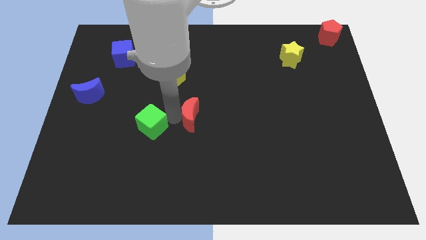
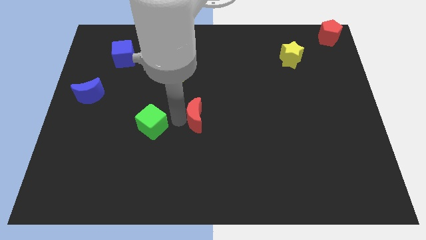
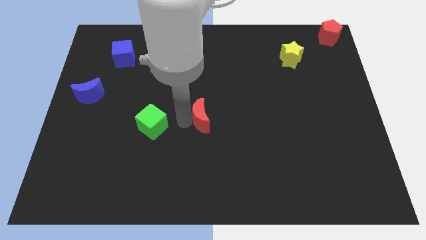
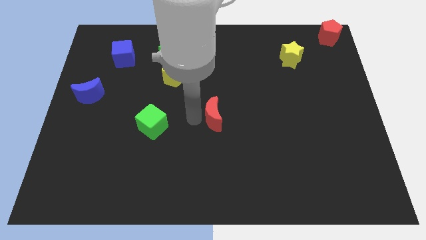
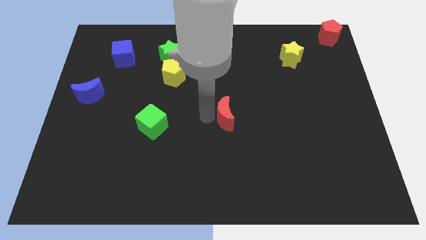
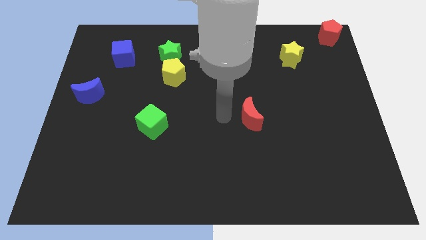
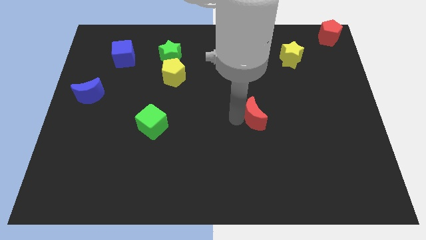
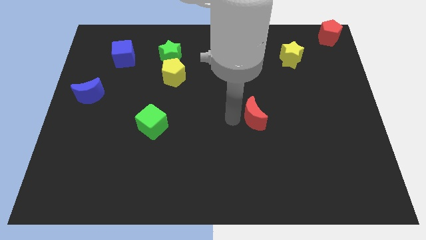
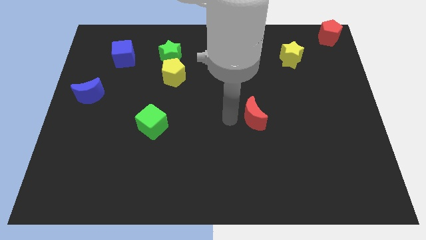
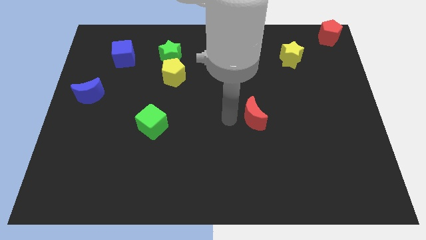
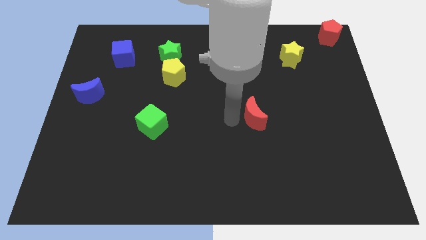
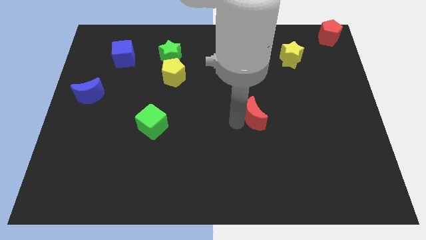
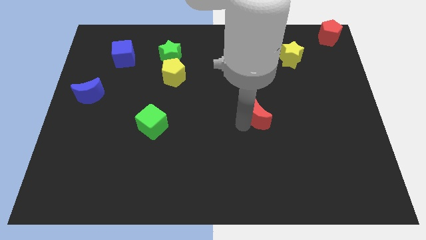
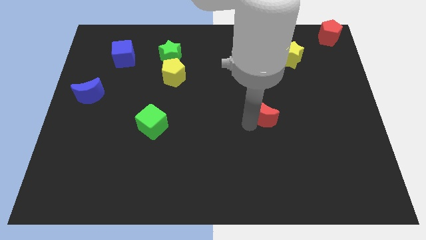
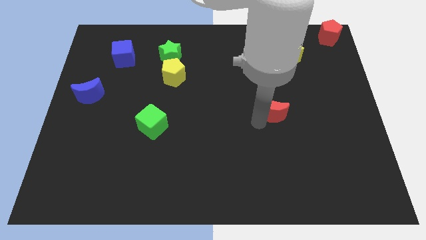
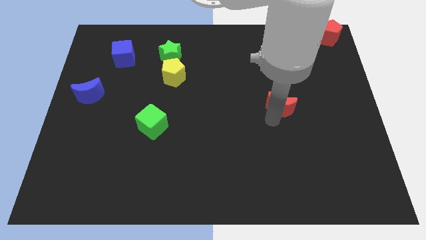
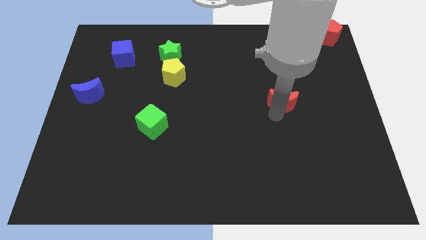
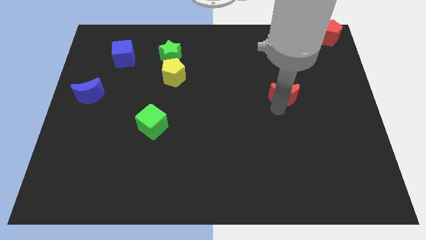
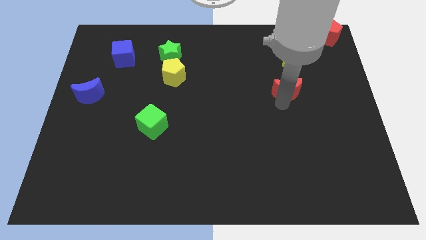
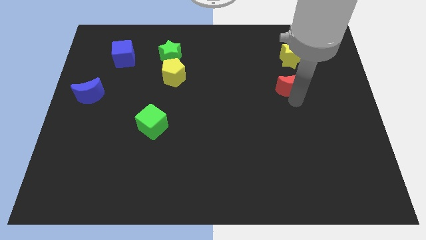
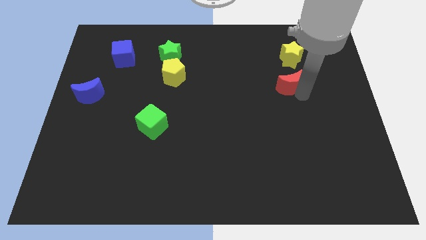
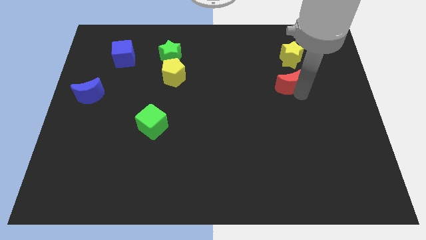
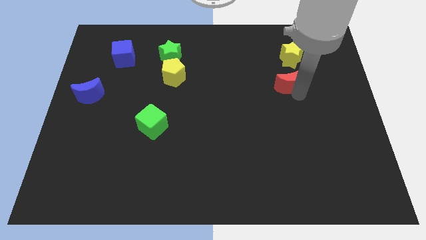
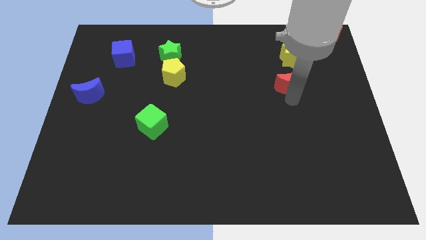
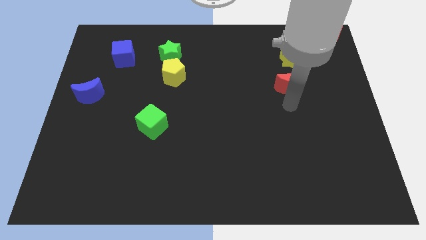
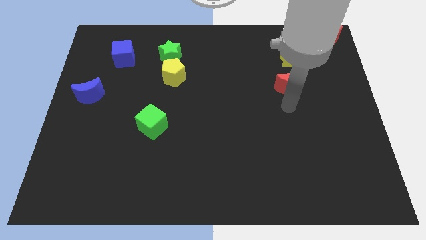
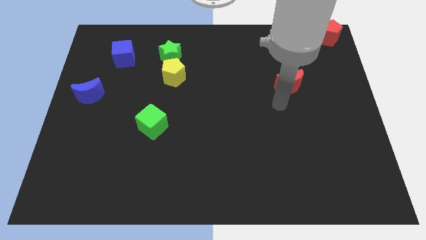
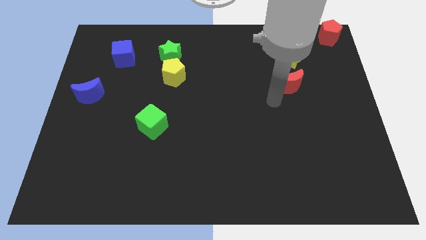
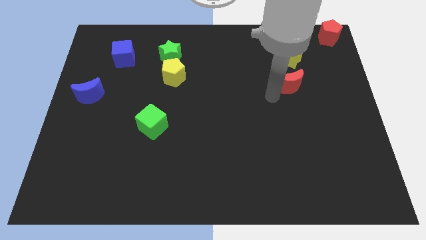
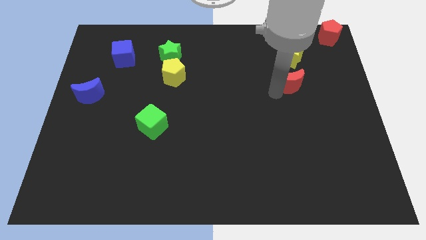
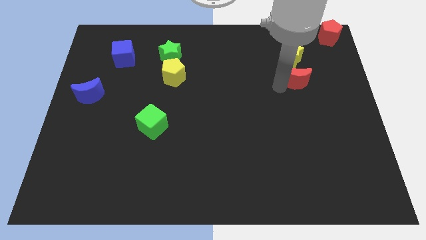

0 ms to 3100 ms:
push the red crescent to the bottom of the yellow star

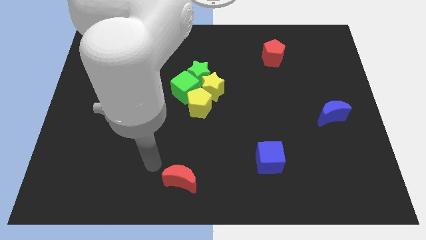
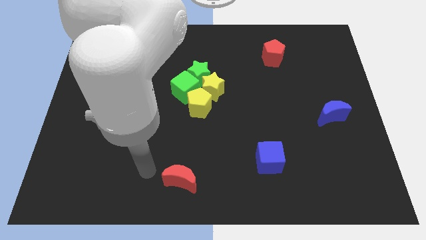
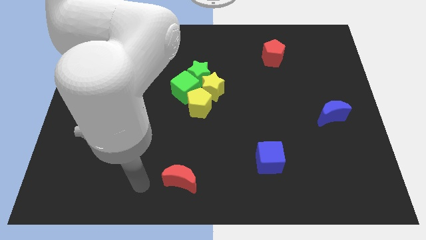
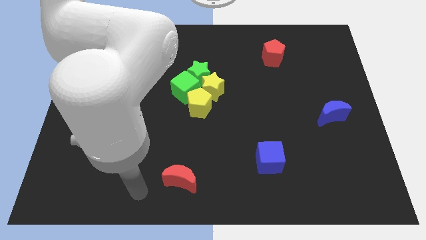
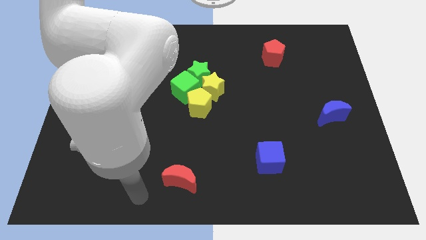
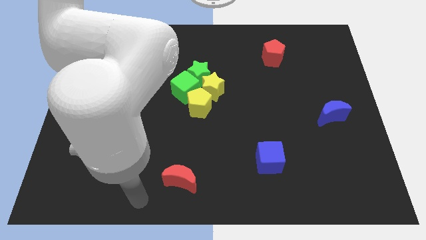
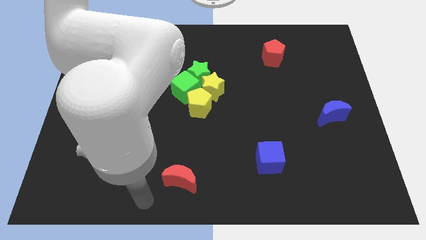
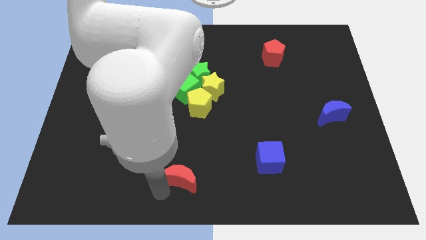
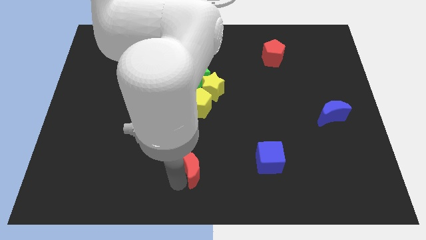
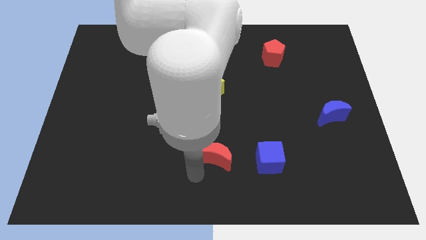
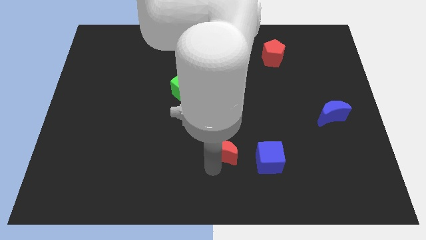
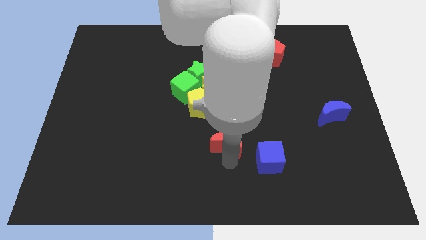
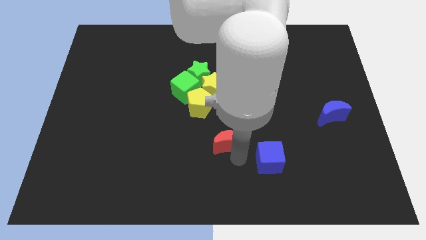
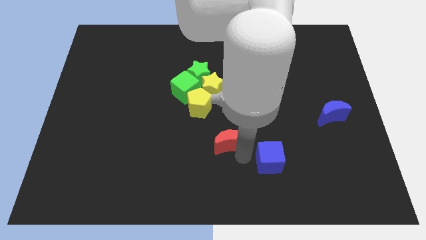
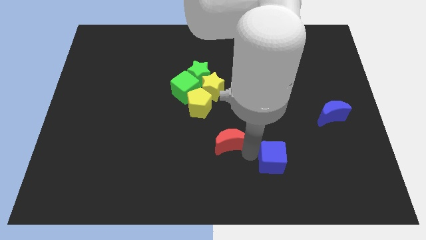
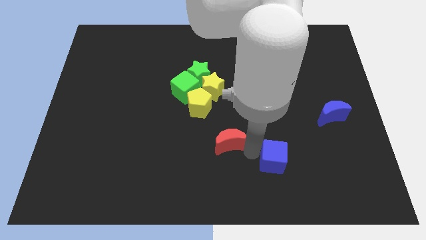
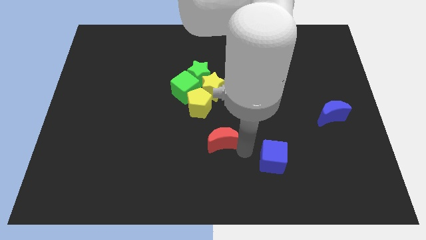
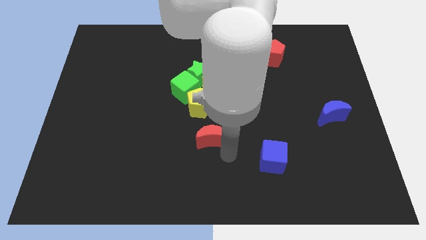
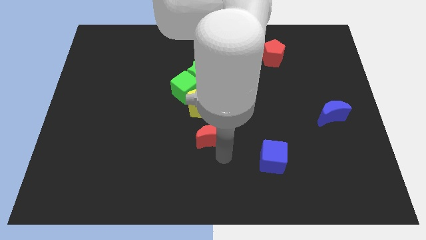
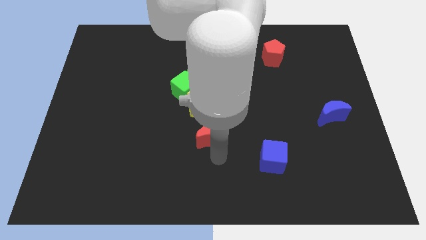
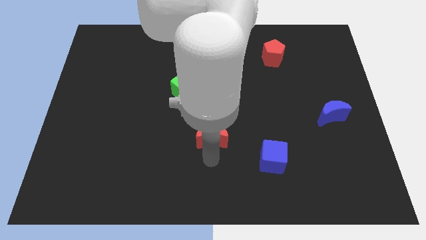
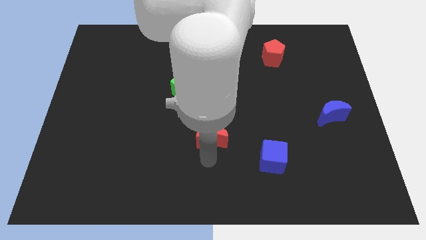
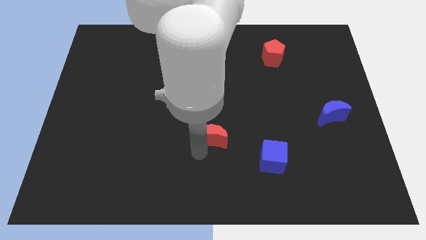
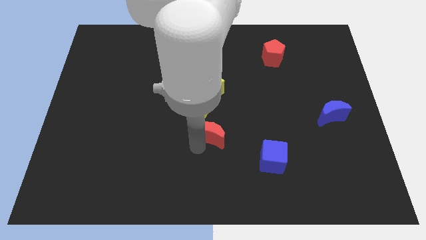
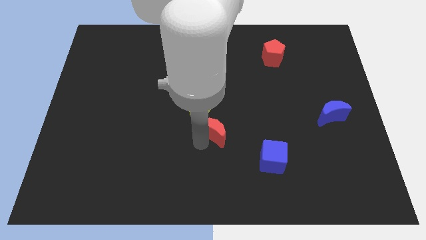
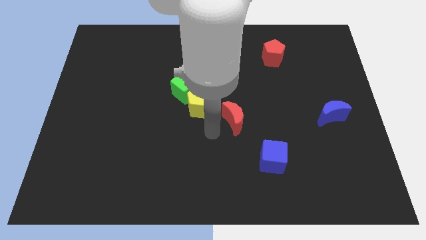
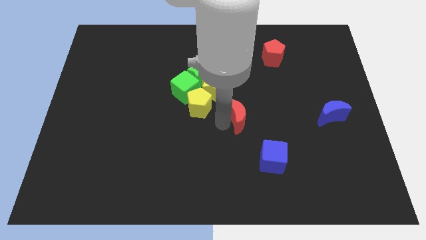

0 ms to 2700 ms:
move the red crescent between blue cube and yellow pentagon

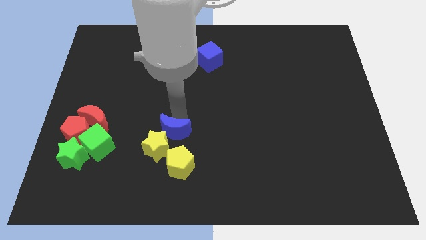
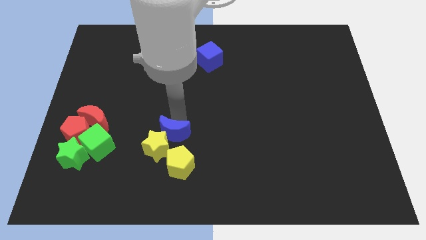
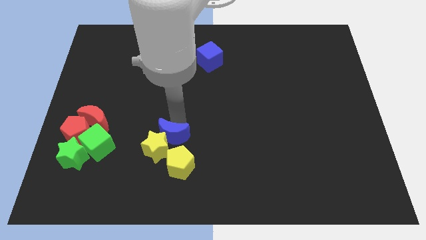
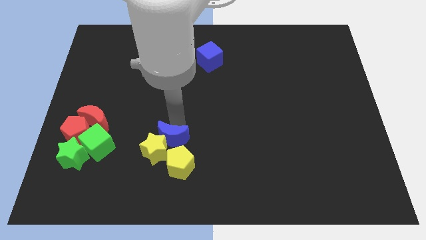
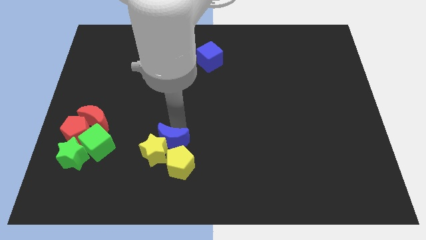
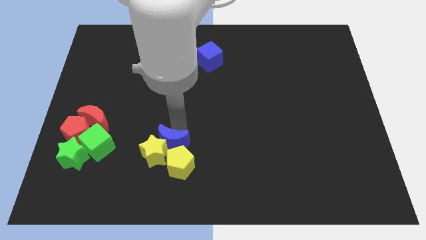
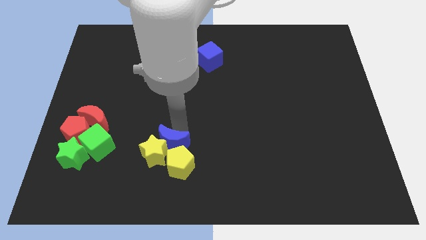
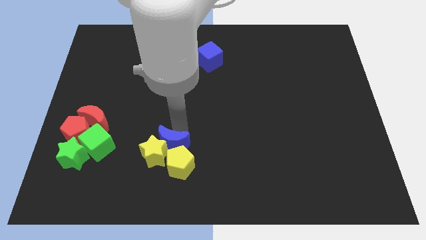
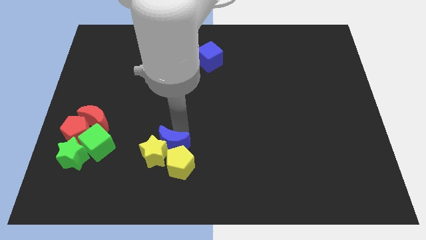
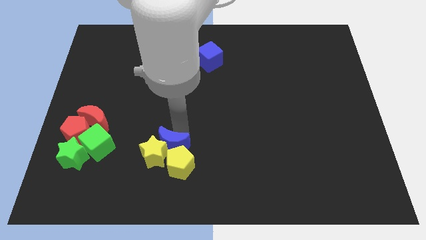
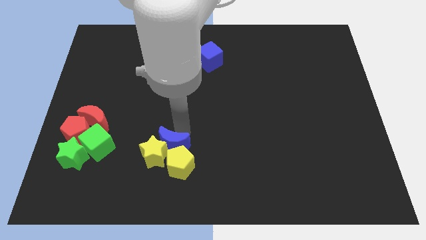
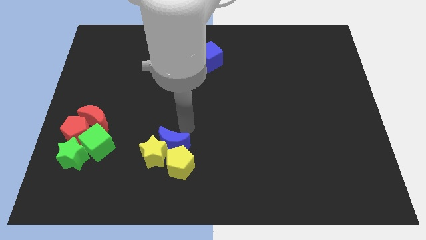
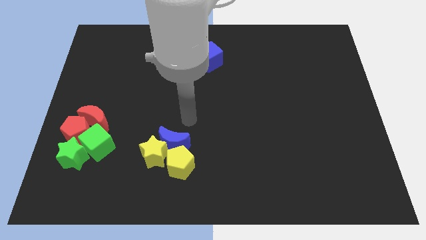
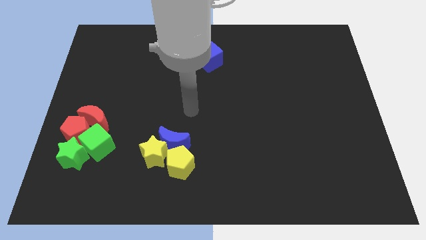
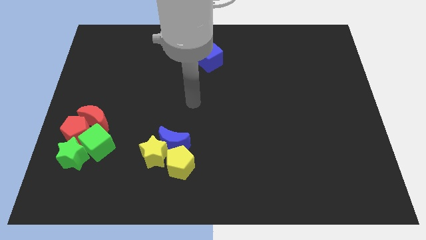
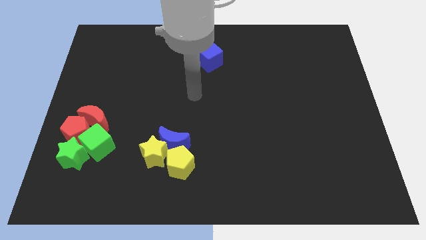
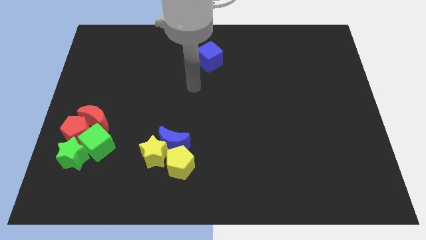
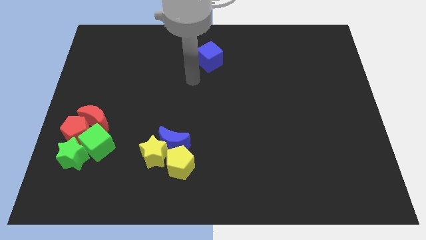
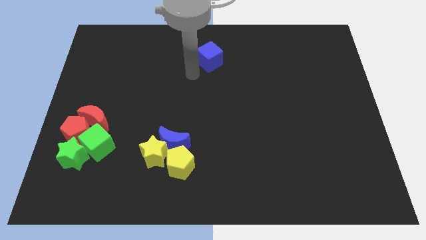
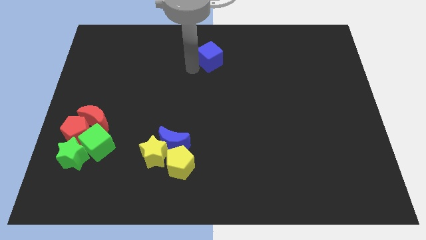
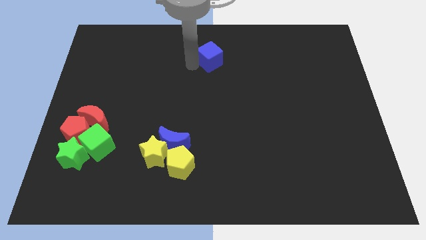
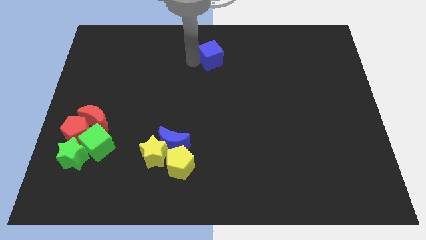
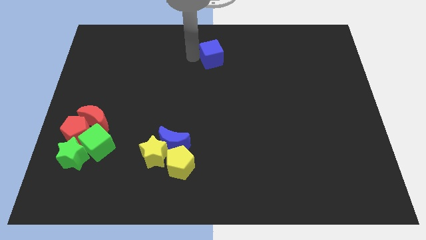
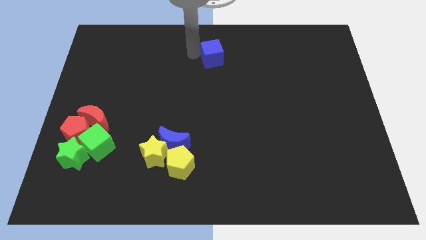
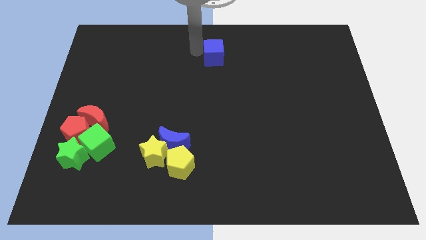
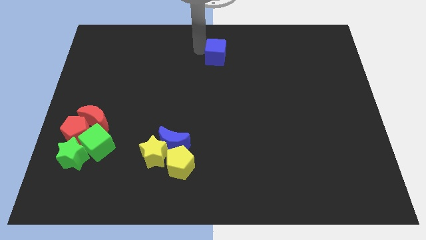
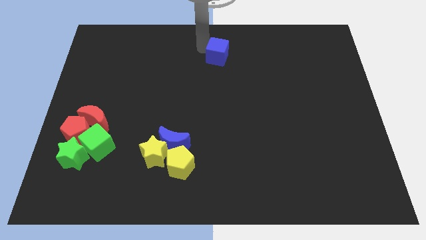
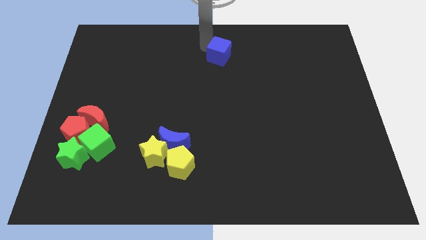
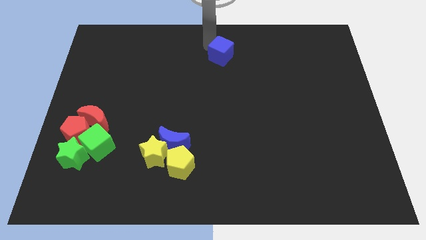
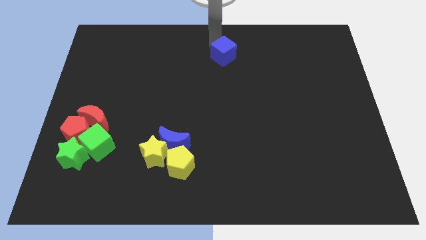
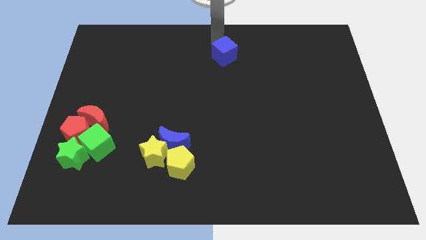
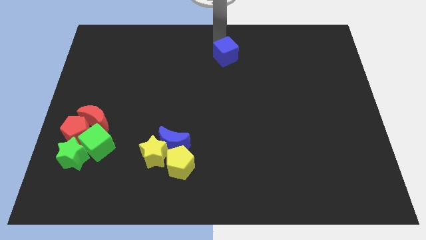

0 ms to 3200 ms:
move your arm to the top center of the board

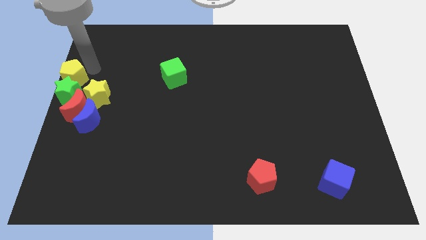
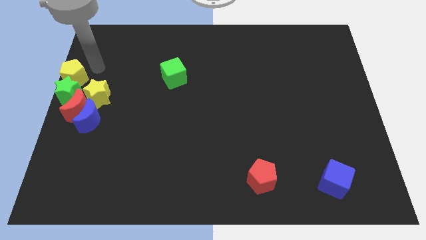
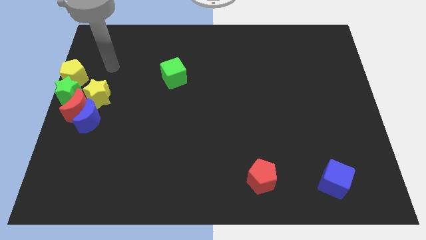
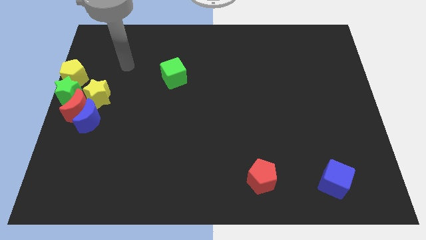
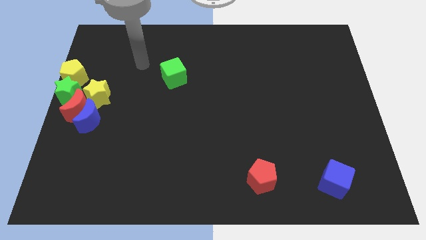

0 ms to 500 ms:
move the arm away from the yellow pentagon
